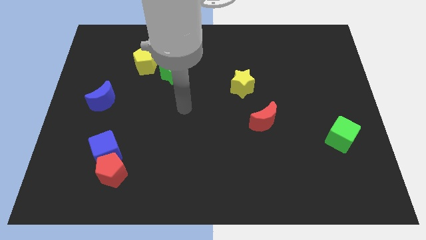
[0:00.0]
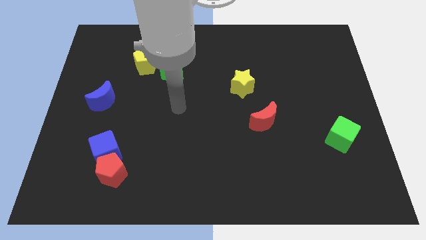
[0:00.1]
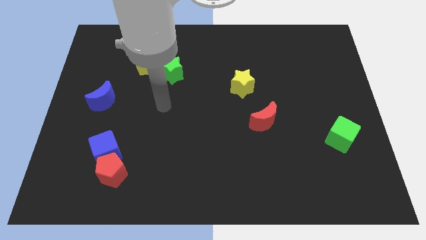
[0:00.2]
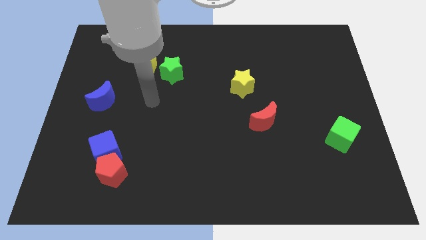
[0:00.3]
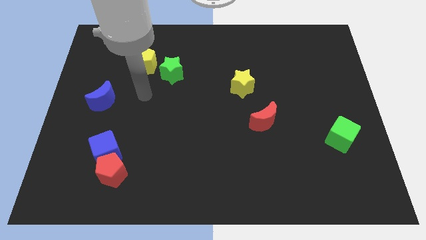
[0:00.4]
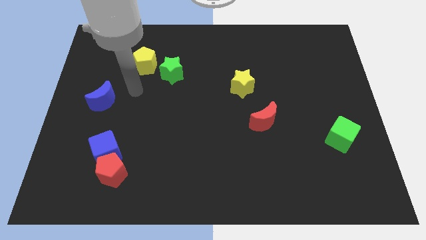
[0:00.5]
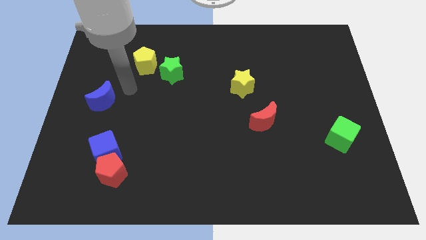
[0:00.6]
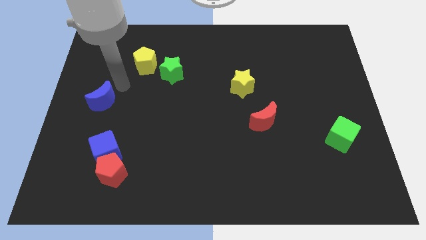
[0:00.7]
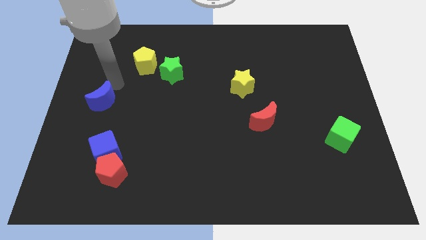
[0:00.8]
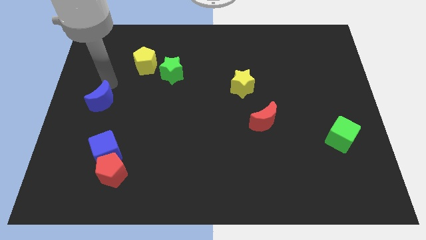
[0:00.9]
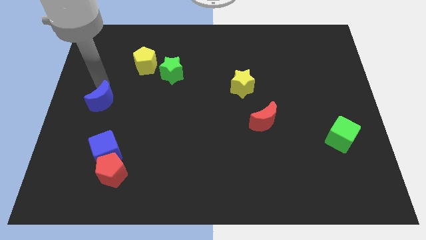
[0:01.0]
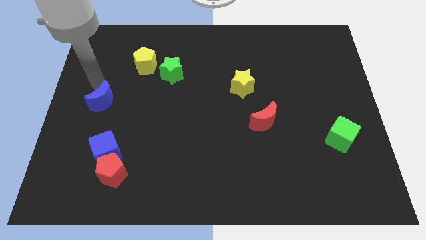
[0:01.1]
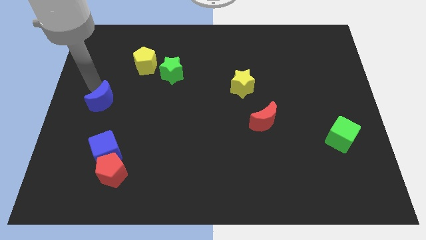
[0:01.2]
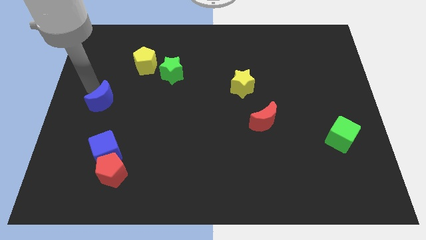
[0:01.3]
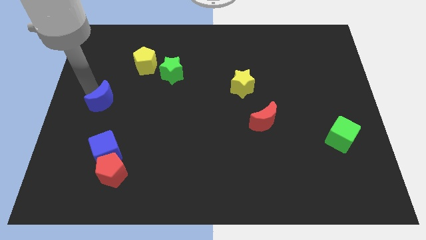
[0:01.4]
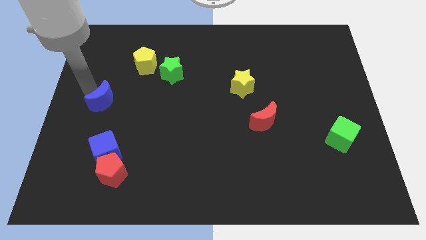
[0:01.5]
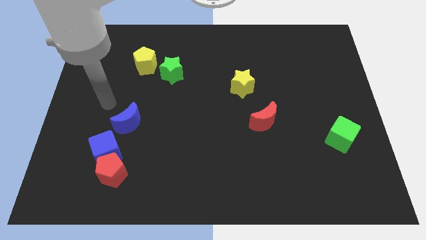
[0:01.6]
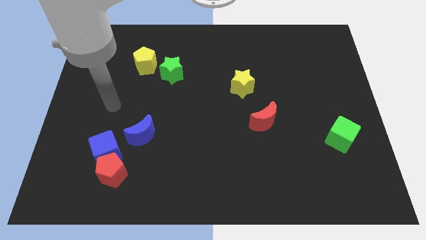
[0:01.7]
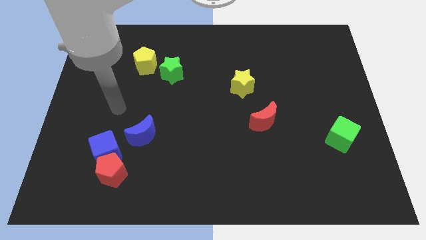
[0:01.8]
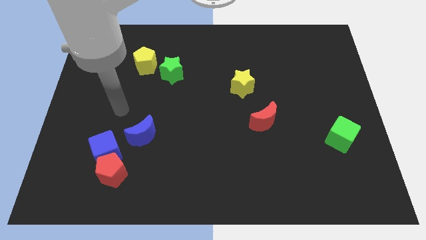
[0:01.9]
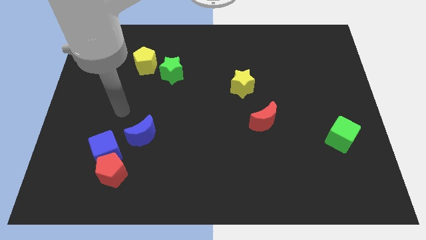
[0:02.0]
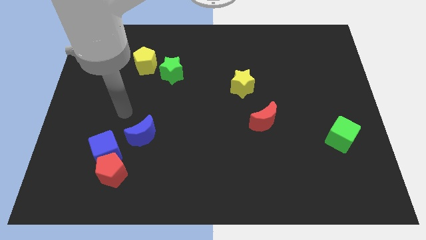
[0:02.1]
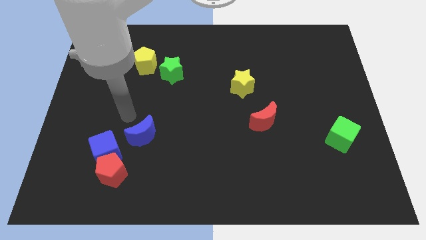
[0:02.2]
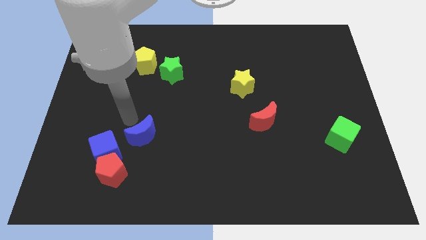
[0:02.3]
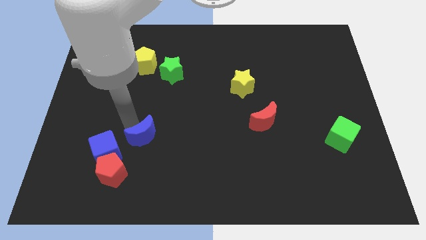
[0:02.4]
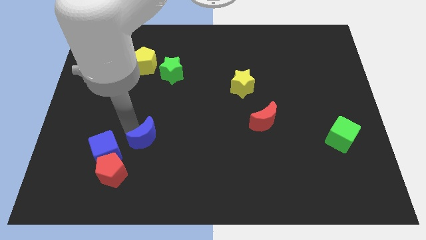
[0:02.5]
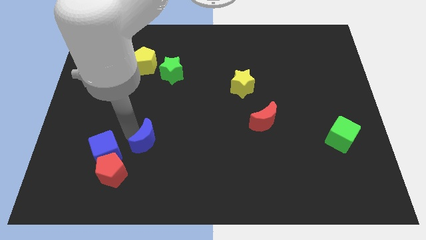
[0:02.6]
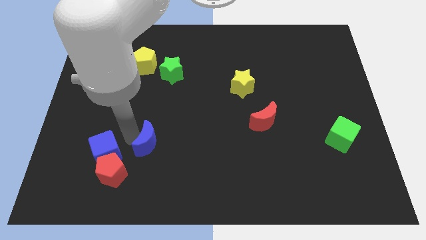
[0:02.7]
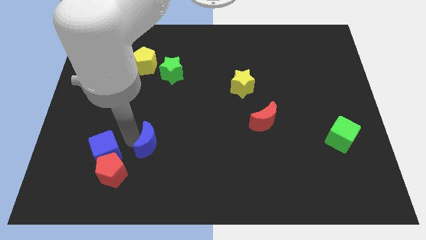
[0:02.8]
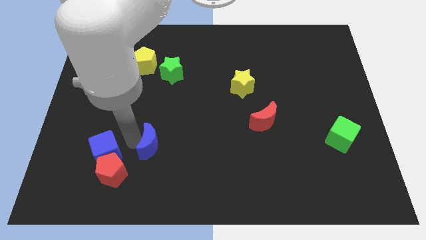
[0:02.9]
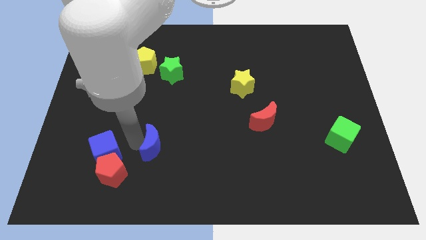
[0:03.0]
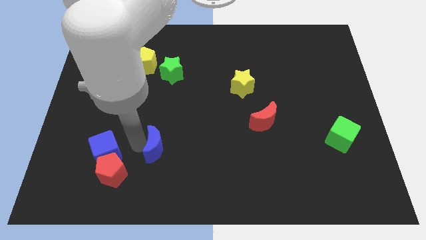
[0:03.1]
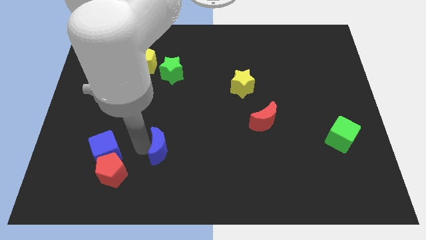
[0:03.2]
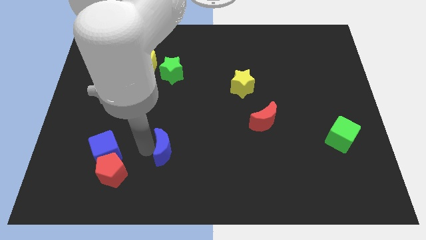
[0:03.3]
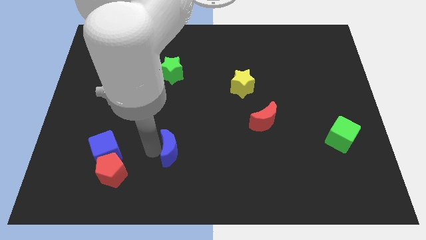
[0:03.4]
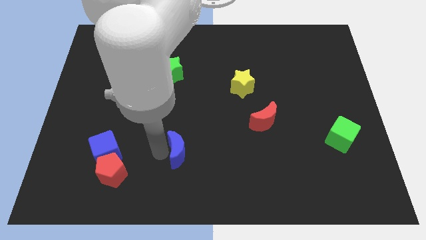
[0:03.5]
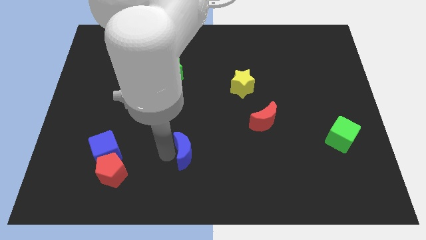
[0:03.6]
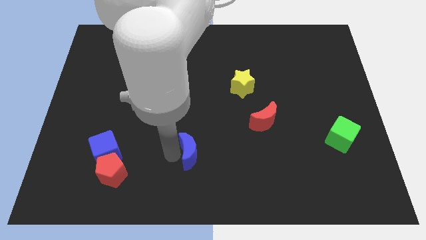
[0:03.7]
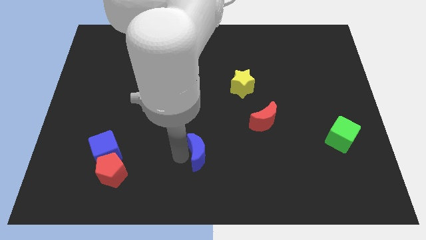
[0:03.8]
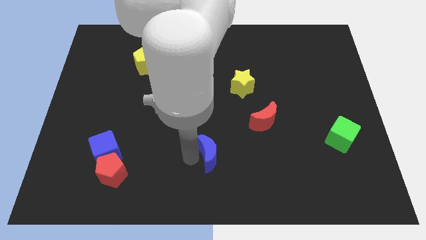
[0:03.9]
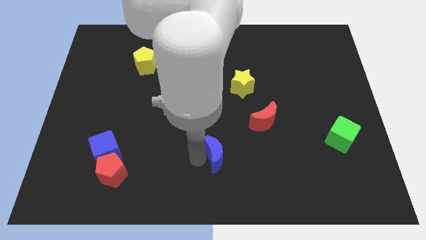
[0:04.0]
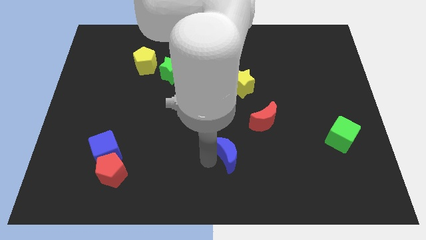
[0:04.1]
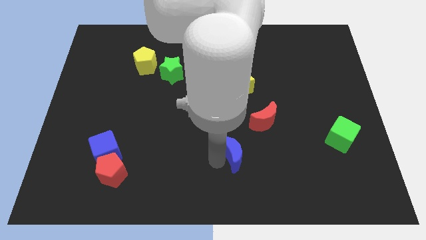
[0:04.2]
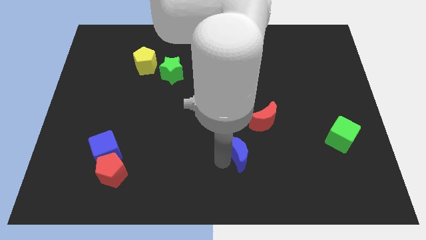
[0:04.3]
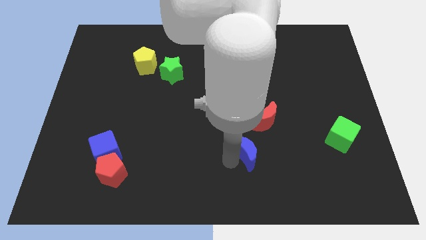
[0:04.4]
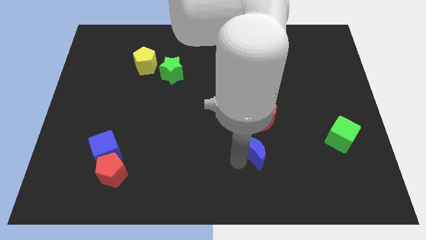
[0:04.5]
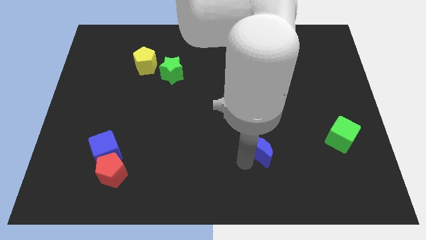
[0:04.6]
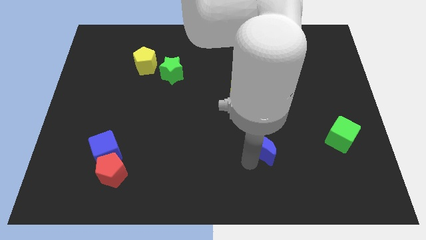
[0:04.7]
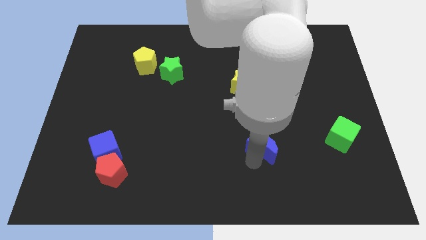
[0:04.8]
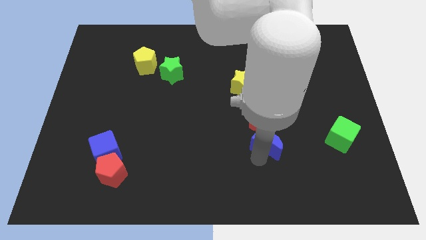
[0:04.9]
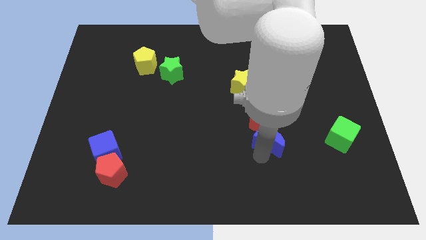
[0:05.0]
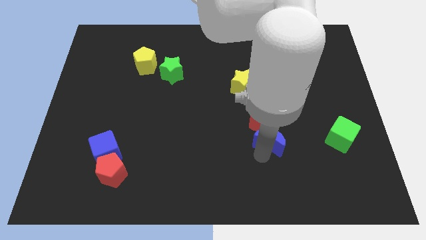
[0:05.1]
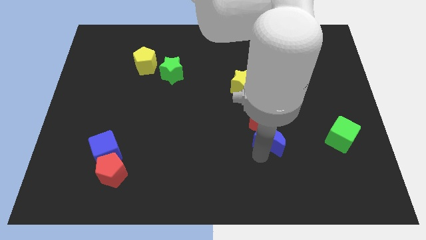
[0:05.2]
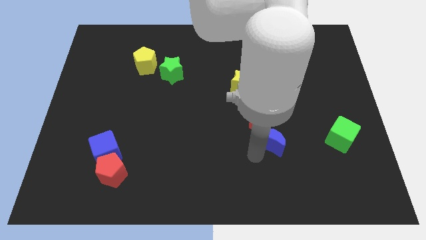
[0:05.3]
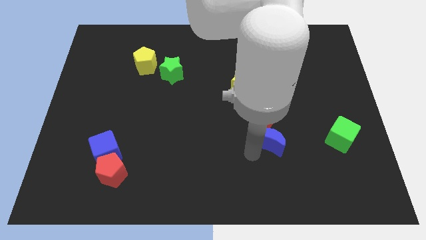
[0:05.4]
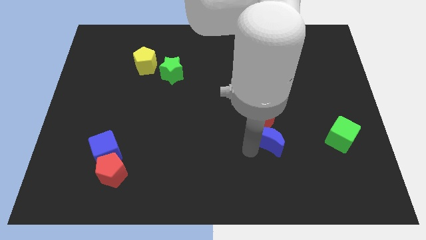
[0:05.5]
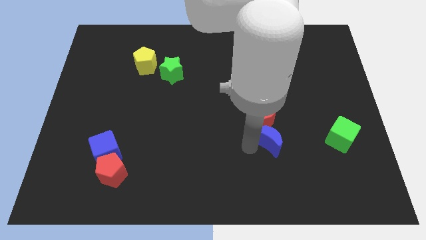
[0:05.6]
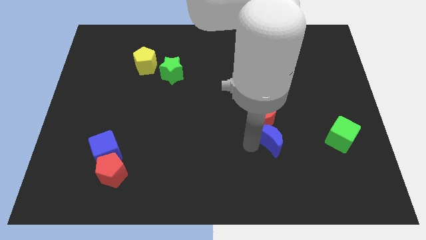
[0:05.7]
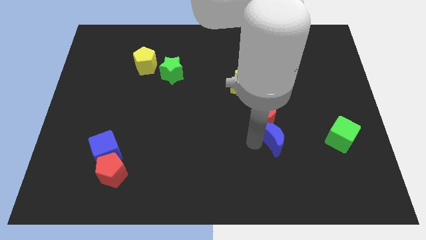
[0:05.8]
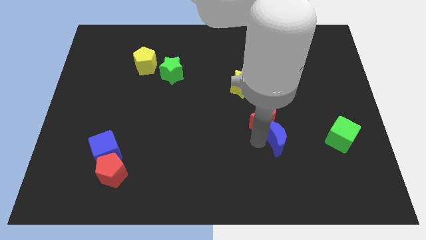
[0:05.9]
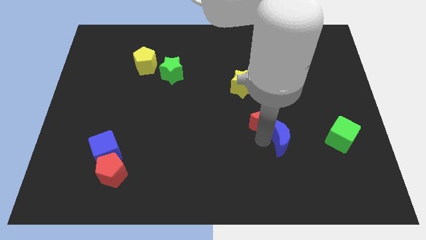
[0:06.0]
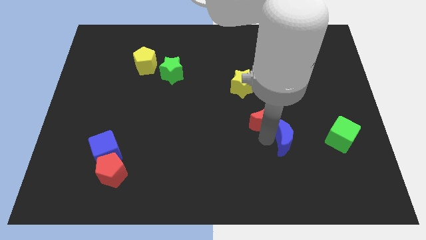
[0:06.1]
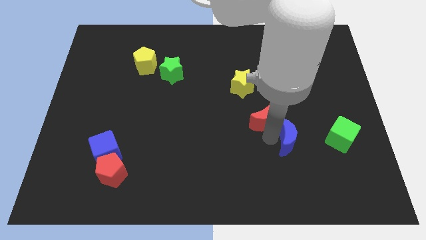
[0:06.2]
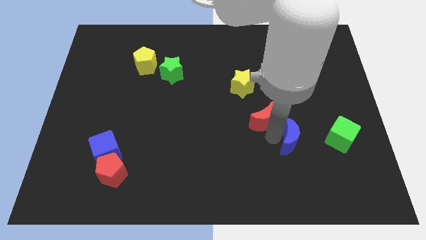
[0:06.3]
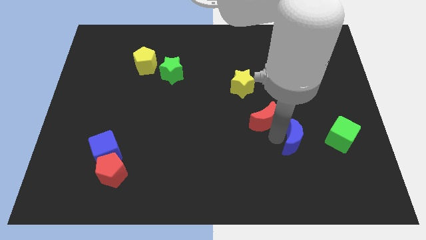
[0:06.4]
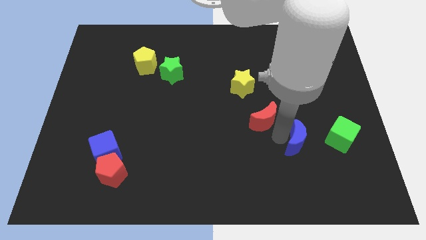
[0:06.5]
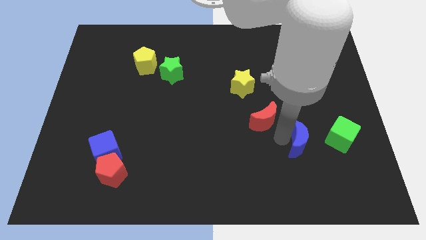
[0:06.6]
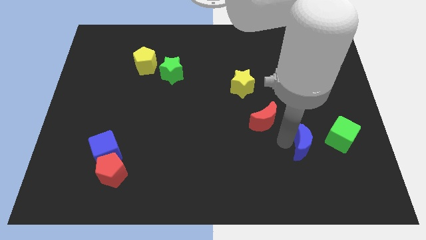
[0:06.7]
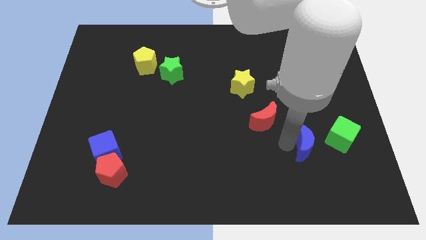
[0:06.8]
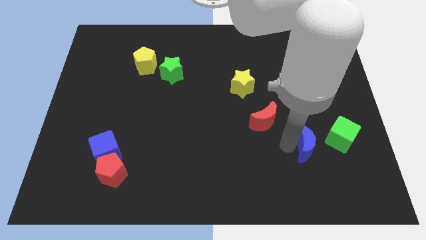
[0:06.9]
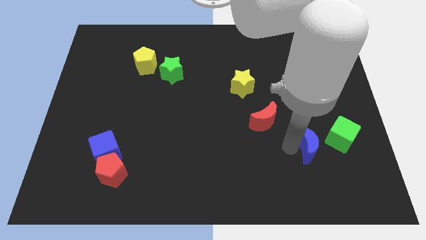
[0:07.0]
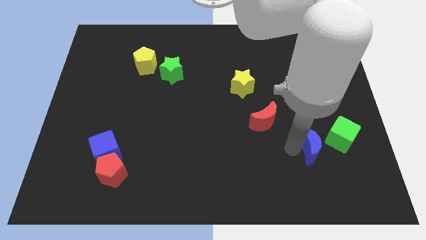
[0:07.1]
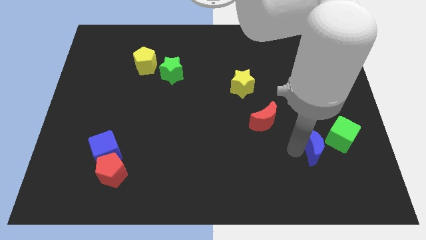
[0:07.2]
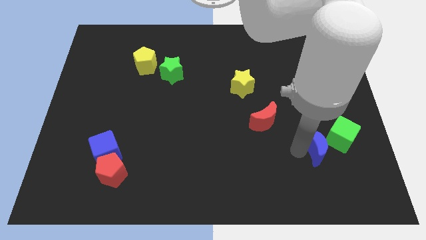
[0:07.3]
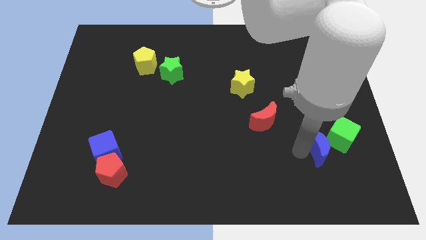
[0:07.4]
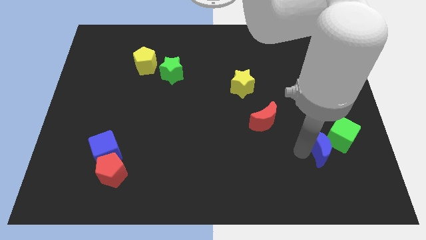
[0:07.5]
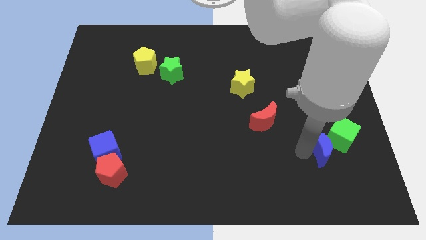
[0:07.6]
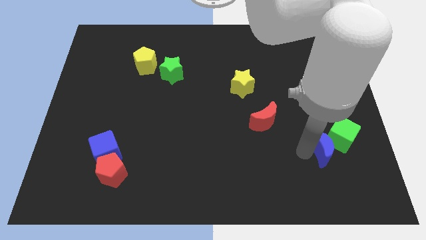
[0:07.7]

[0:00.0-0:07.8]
slide the blue moon to the green cube
